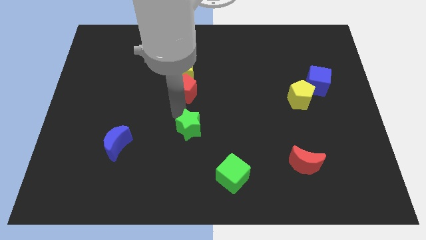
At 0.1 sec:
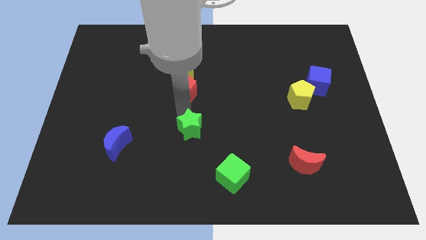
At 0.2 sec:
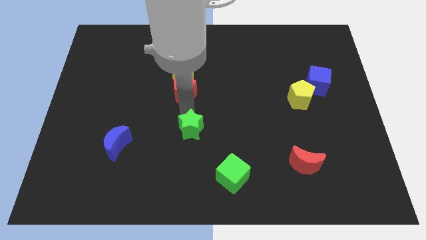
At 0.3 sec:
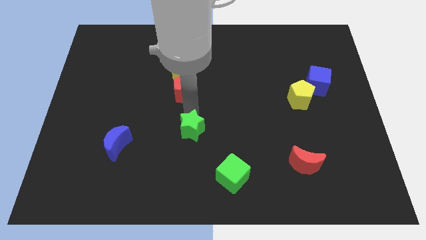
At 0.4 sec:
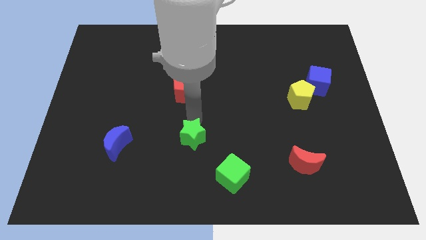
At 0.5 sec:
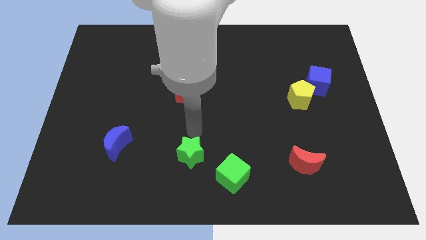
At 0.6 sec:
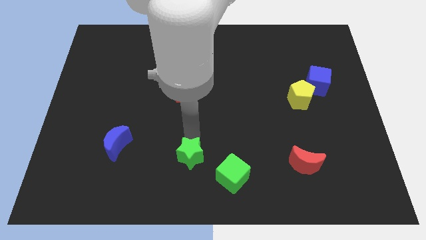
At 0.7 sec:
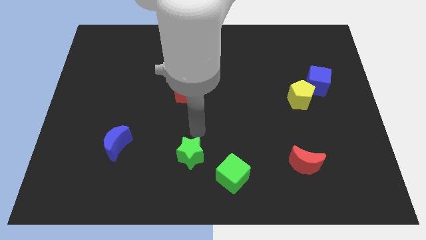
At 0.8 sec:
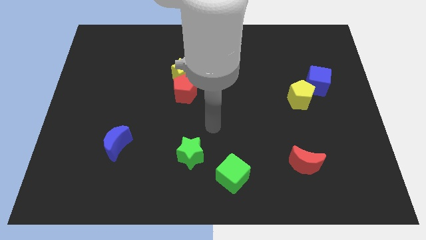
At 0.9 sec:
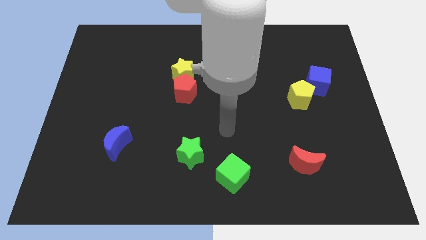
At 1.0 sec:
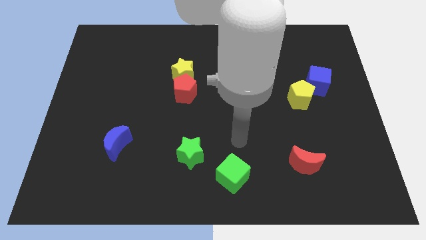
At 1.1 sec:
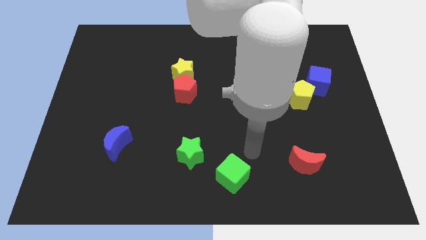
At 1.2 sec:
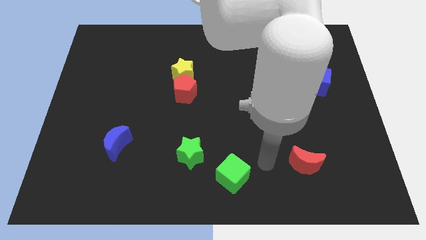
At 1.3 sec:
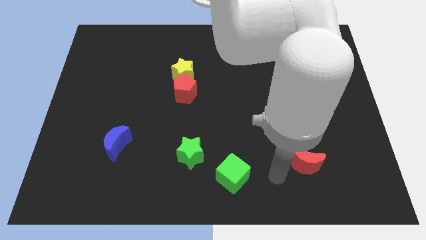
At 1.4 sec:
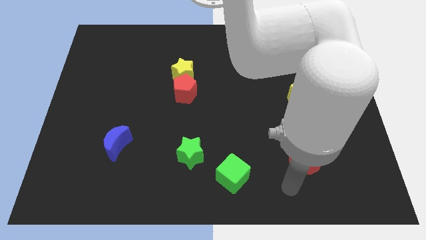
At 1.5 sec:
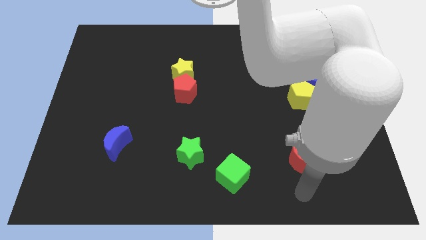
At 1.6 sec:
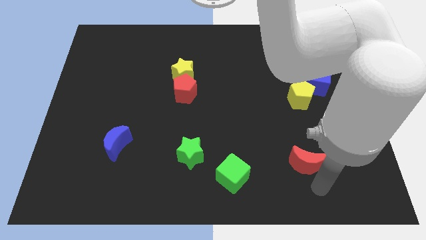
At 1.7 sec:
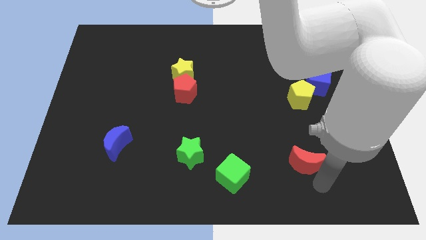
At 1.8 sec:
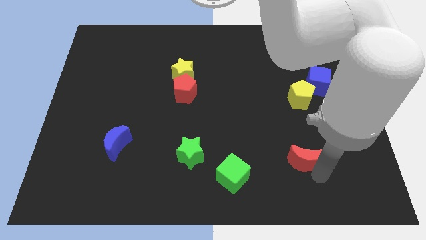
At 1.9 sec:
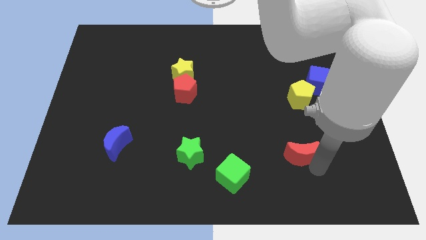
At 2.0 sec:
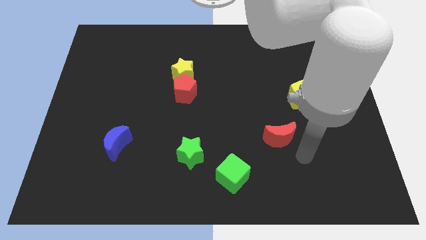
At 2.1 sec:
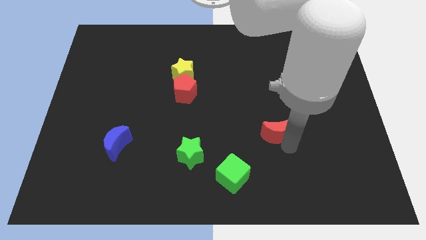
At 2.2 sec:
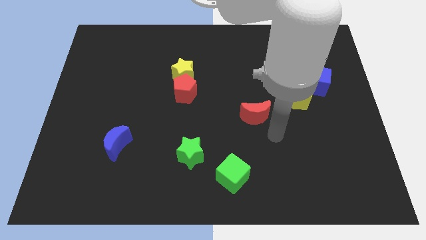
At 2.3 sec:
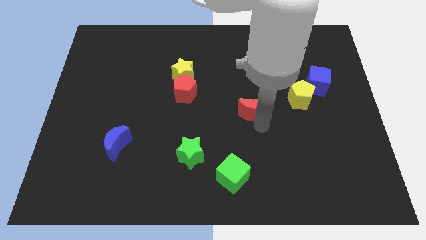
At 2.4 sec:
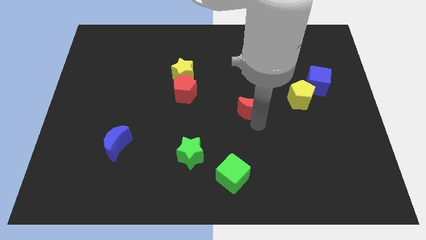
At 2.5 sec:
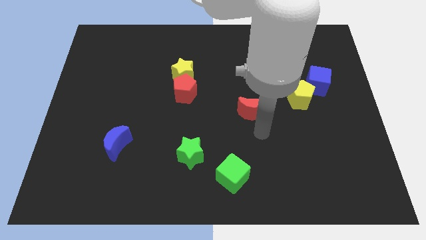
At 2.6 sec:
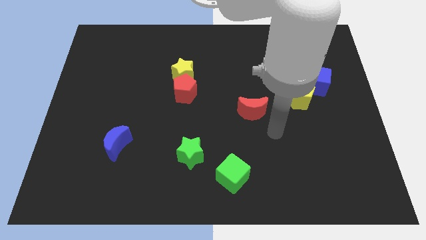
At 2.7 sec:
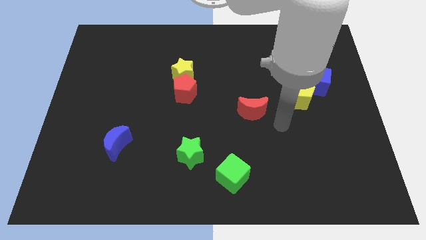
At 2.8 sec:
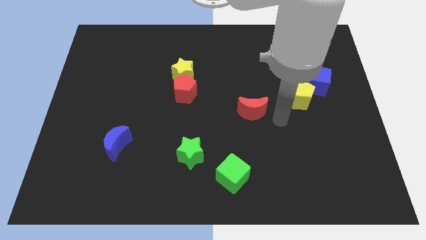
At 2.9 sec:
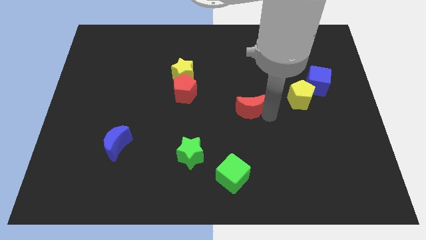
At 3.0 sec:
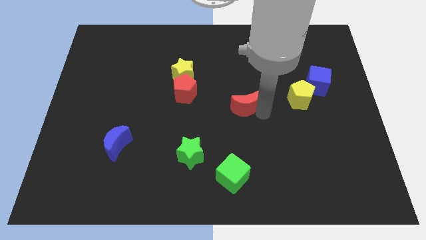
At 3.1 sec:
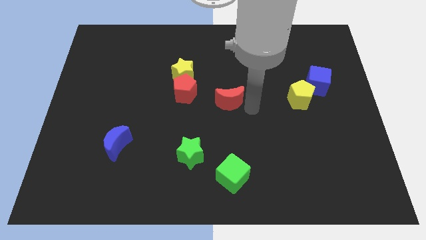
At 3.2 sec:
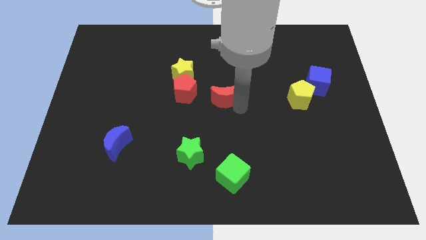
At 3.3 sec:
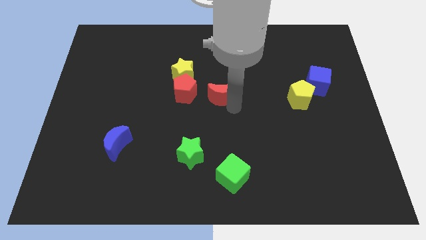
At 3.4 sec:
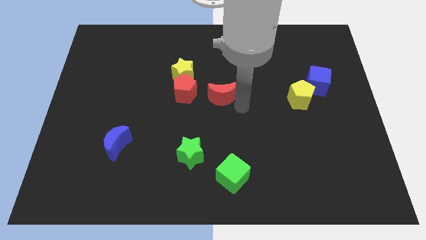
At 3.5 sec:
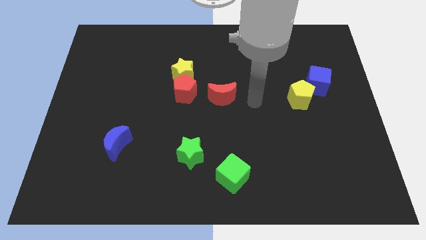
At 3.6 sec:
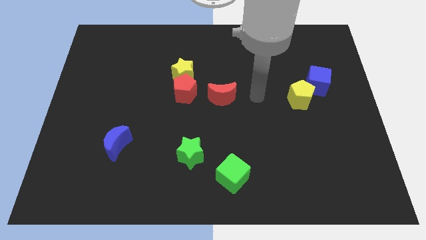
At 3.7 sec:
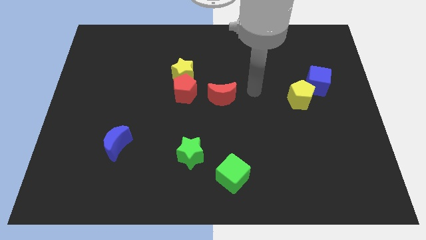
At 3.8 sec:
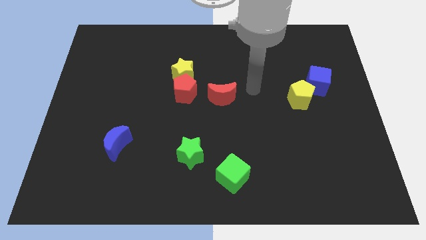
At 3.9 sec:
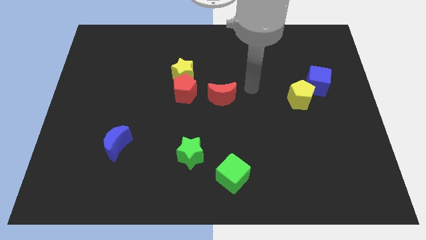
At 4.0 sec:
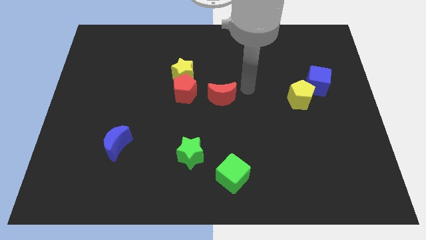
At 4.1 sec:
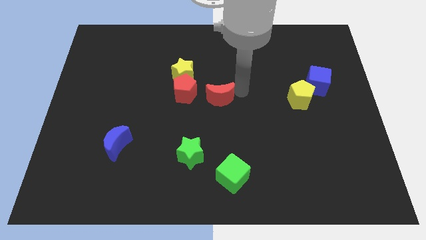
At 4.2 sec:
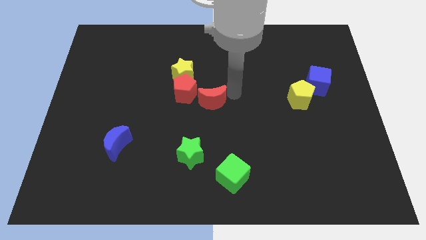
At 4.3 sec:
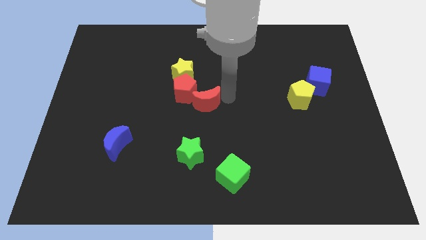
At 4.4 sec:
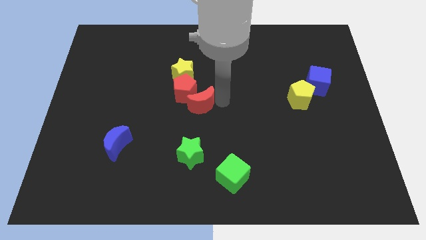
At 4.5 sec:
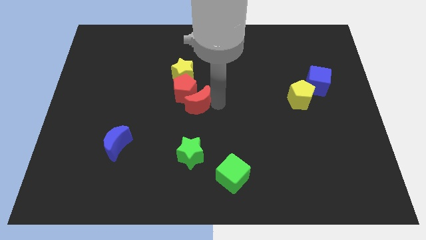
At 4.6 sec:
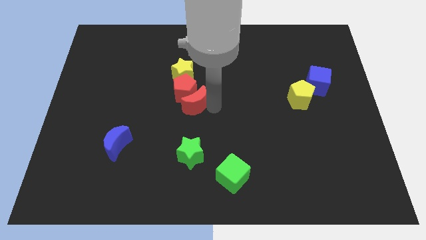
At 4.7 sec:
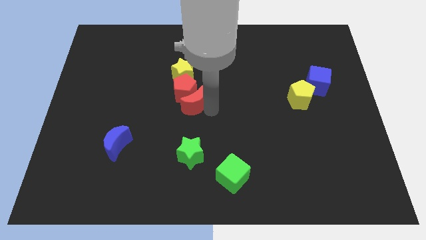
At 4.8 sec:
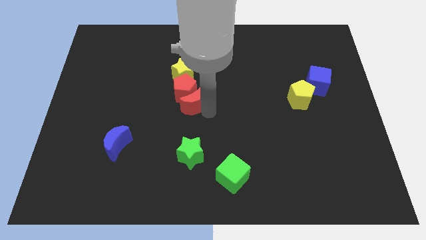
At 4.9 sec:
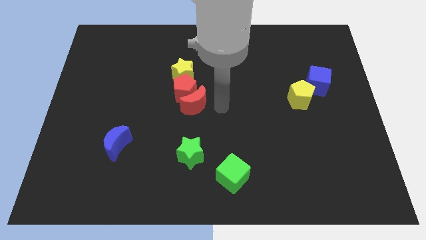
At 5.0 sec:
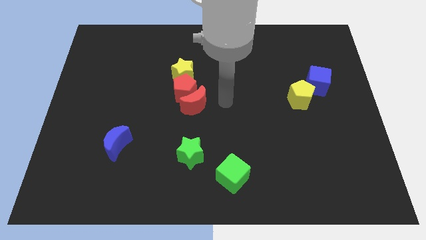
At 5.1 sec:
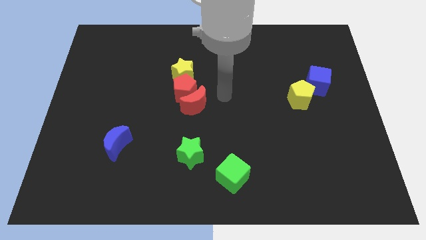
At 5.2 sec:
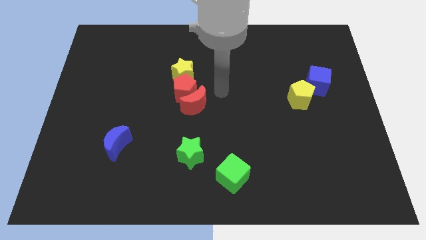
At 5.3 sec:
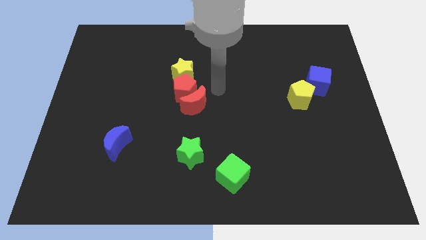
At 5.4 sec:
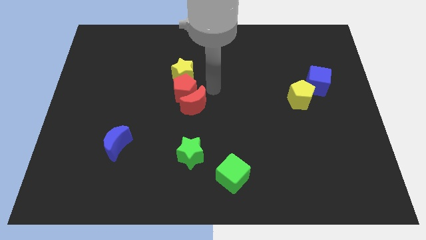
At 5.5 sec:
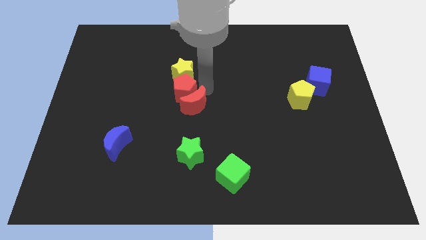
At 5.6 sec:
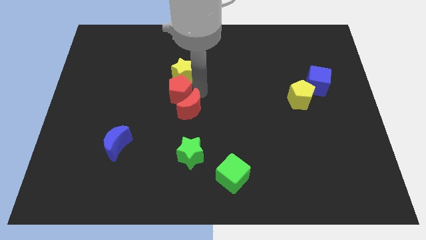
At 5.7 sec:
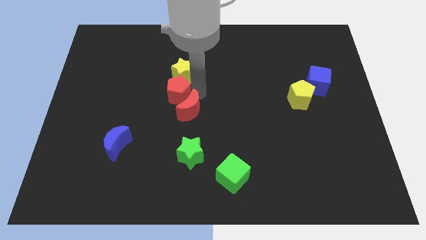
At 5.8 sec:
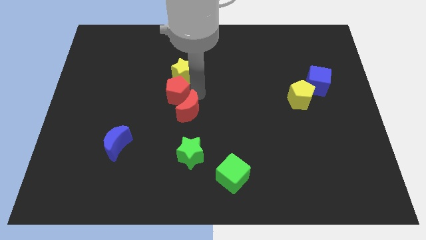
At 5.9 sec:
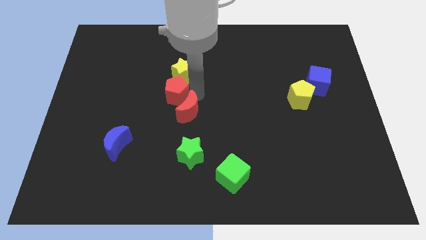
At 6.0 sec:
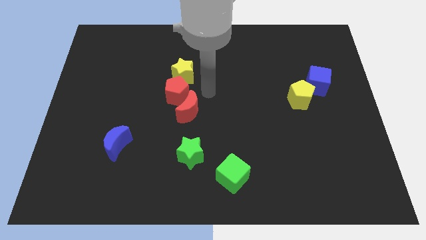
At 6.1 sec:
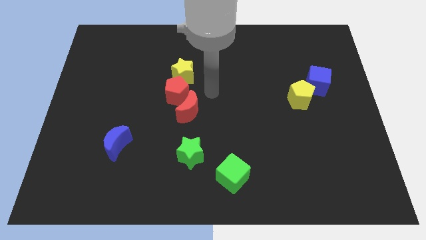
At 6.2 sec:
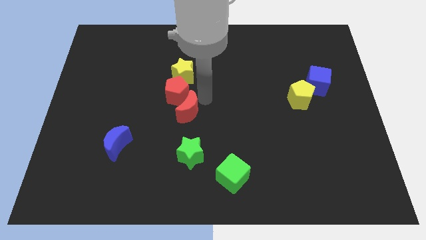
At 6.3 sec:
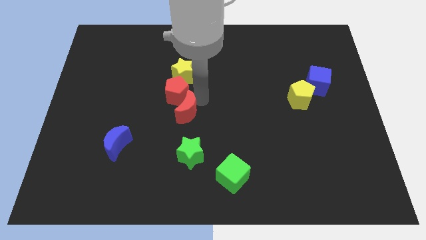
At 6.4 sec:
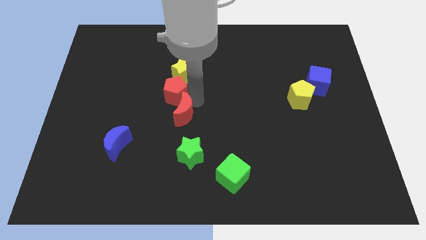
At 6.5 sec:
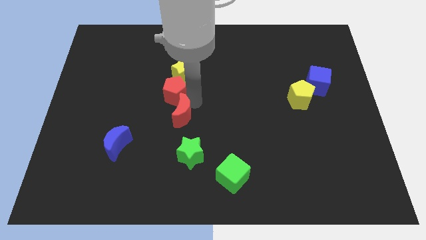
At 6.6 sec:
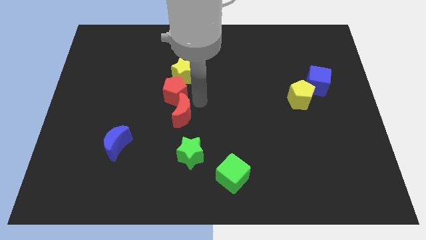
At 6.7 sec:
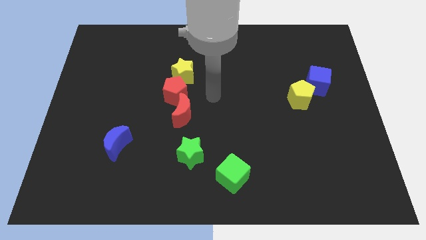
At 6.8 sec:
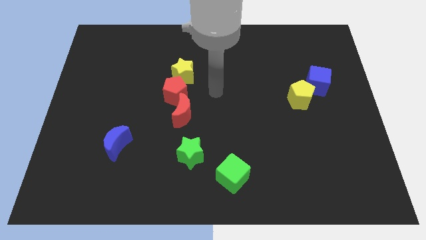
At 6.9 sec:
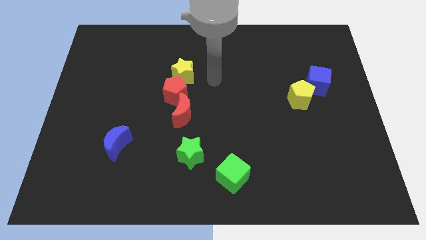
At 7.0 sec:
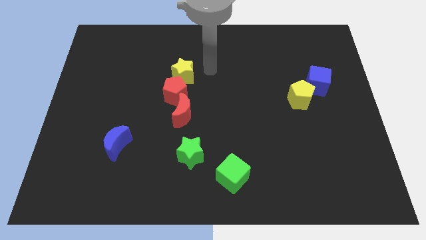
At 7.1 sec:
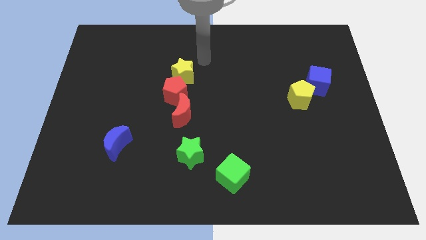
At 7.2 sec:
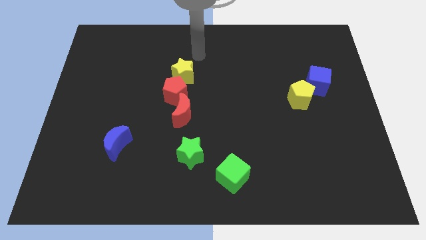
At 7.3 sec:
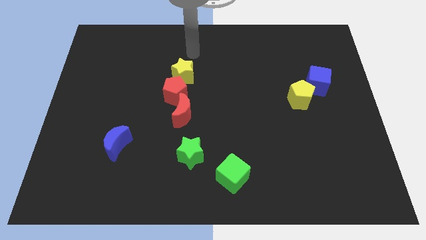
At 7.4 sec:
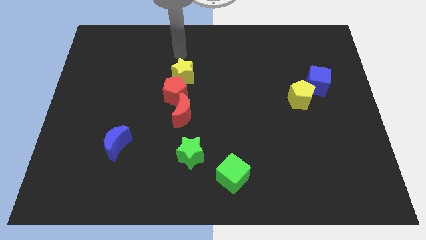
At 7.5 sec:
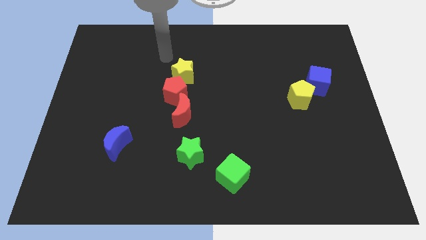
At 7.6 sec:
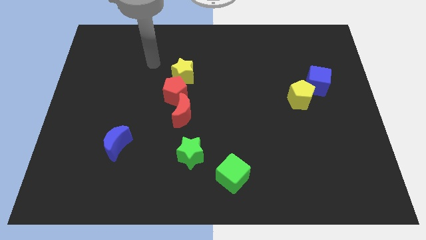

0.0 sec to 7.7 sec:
place the red crescent below to the red pentagon

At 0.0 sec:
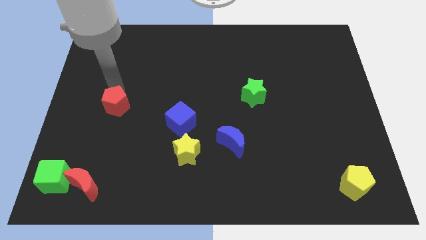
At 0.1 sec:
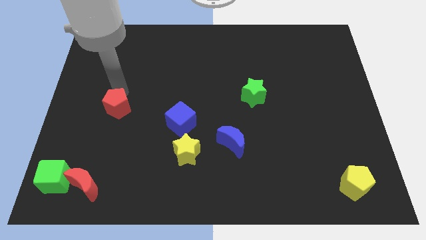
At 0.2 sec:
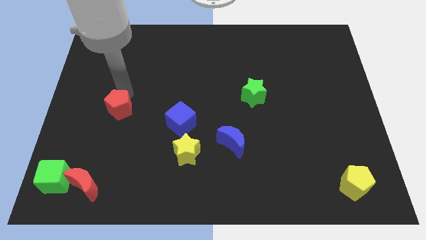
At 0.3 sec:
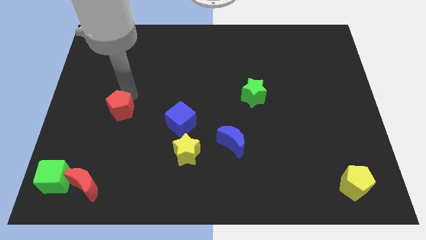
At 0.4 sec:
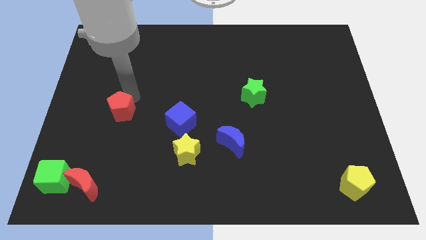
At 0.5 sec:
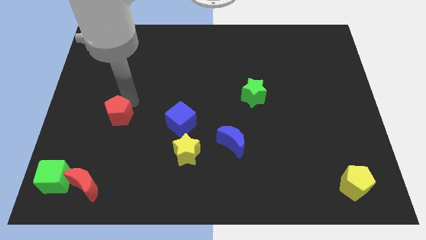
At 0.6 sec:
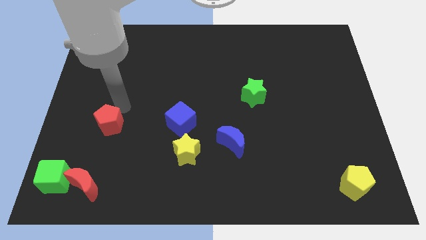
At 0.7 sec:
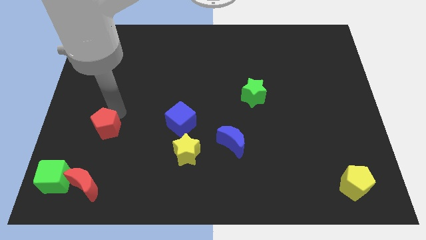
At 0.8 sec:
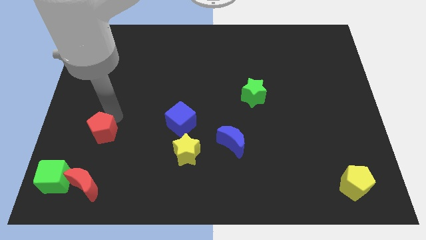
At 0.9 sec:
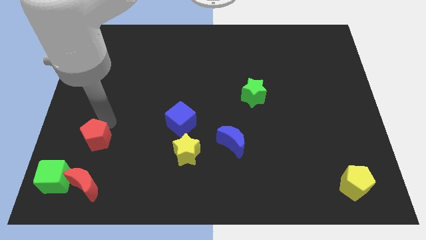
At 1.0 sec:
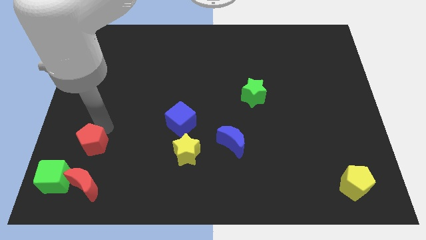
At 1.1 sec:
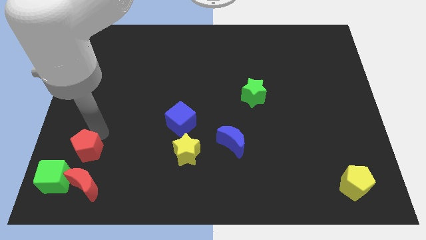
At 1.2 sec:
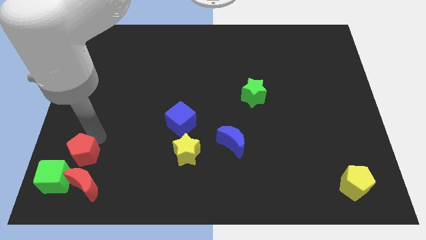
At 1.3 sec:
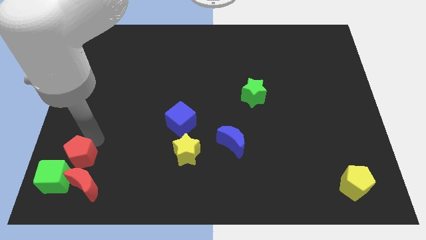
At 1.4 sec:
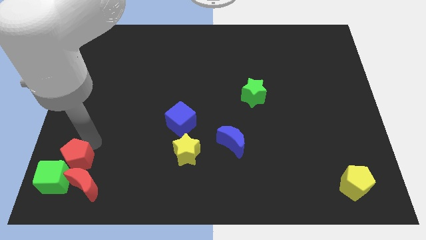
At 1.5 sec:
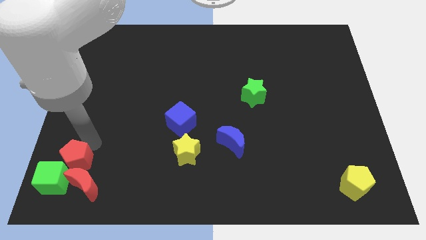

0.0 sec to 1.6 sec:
place red pentagon to the top of red moon
